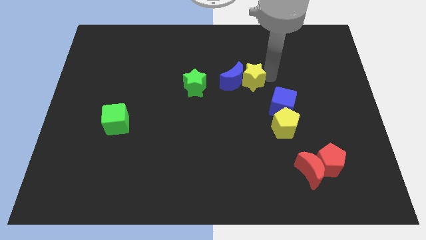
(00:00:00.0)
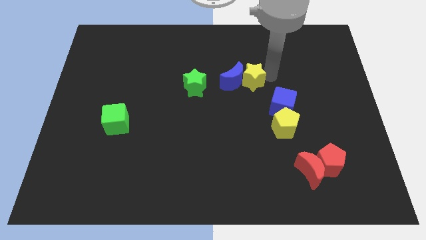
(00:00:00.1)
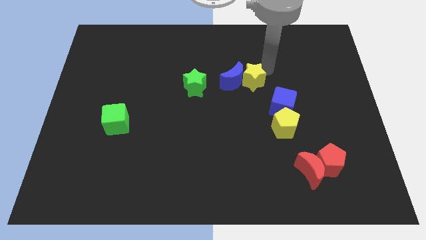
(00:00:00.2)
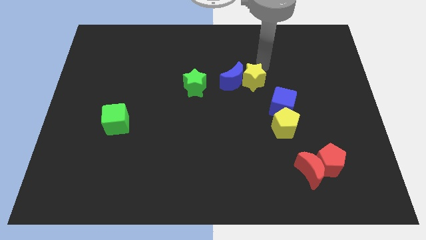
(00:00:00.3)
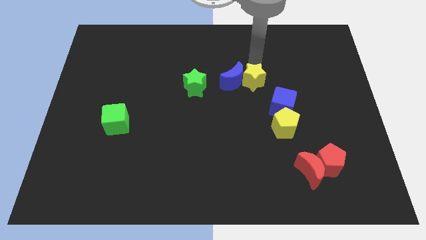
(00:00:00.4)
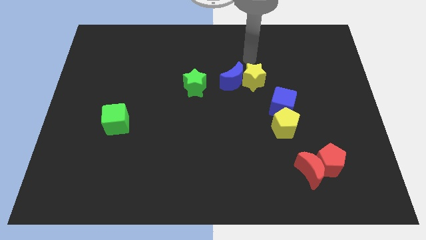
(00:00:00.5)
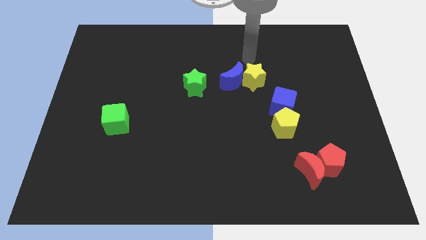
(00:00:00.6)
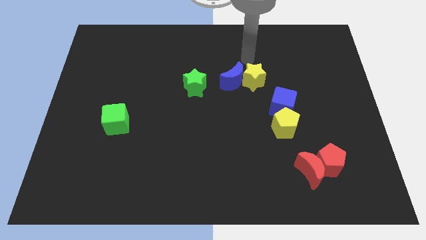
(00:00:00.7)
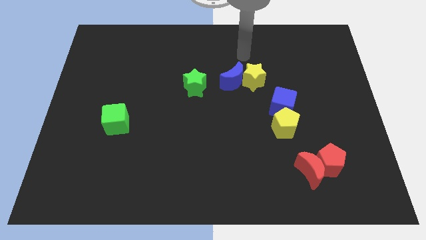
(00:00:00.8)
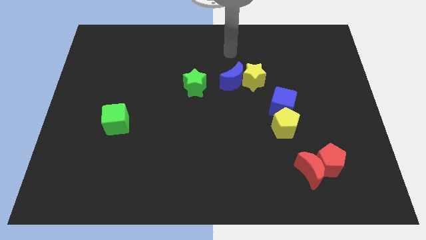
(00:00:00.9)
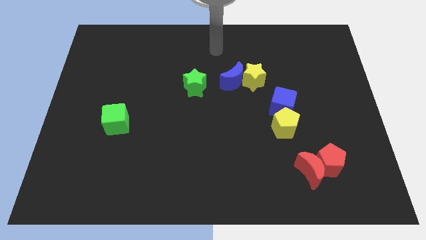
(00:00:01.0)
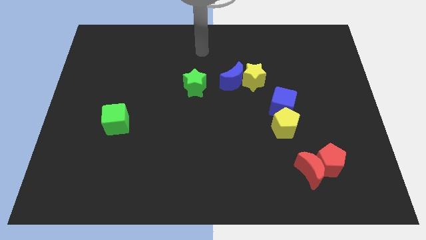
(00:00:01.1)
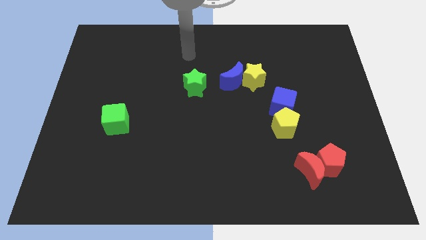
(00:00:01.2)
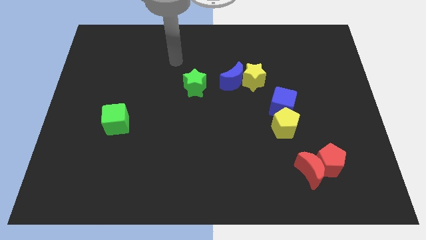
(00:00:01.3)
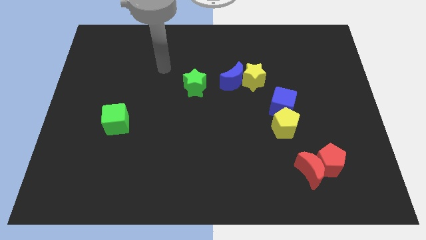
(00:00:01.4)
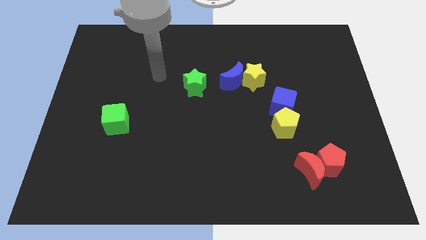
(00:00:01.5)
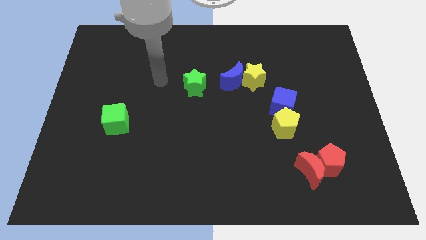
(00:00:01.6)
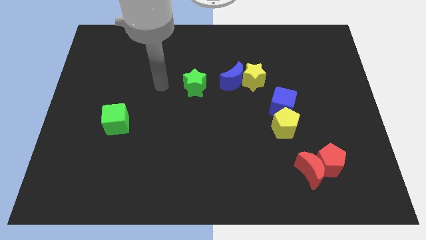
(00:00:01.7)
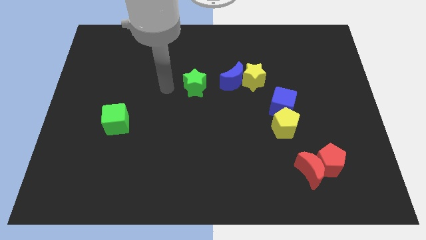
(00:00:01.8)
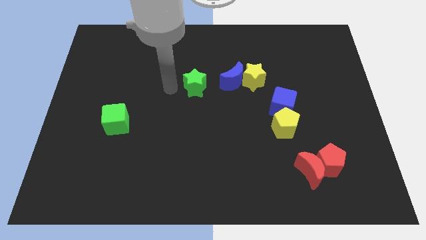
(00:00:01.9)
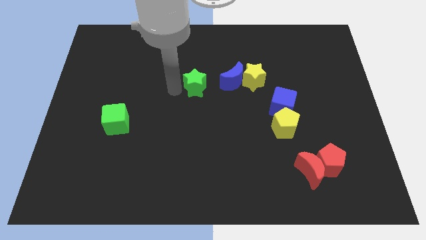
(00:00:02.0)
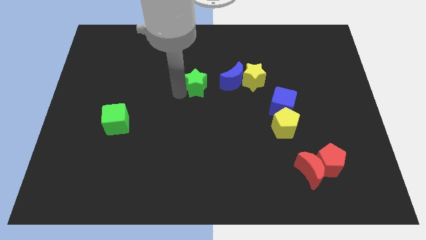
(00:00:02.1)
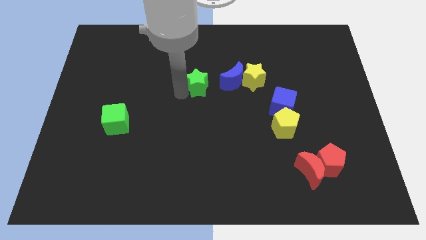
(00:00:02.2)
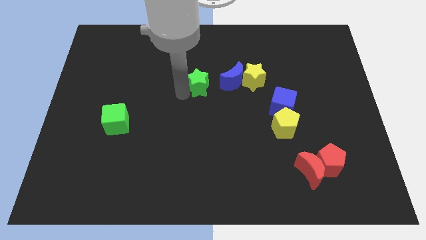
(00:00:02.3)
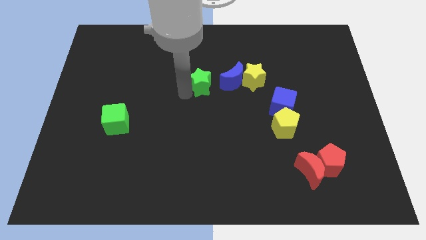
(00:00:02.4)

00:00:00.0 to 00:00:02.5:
touch the green star

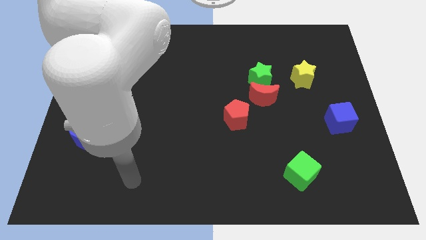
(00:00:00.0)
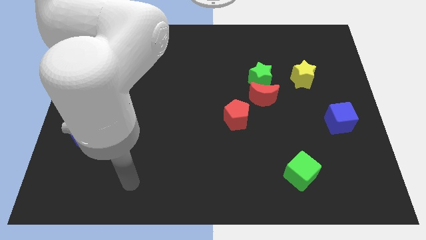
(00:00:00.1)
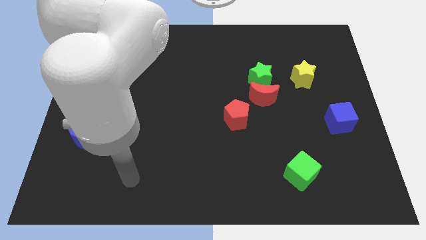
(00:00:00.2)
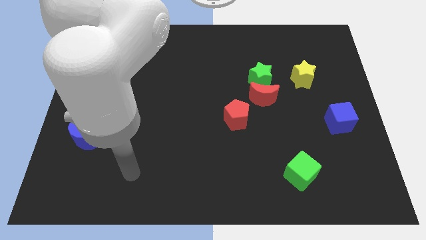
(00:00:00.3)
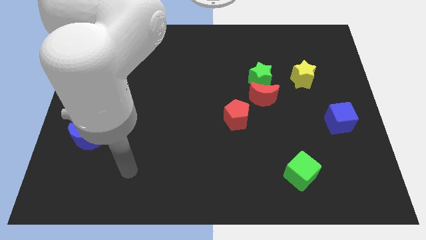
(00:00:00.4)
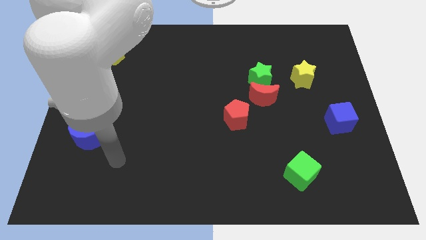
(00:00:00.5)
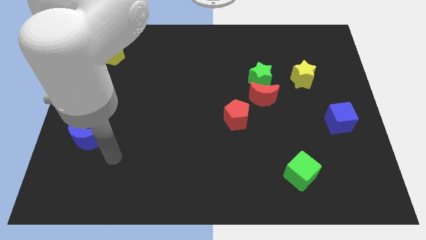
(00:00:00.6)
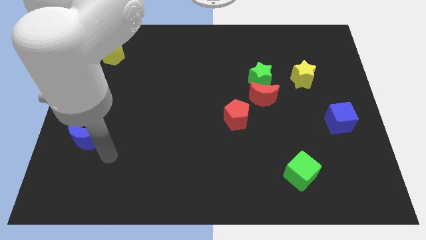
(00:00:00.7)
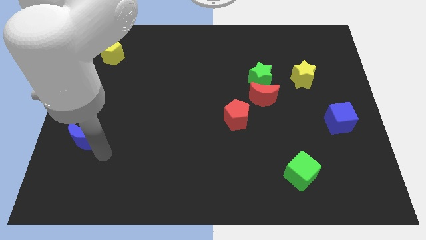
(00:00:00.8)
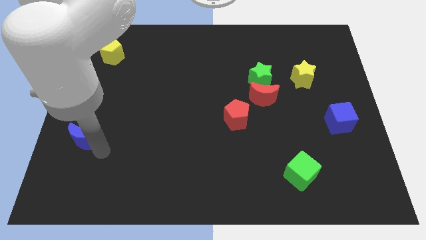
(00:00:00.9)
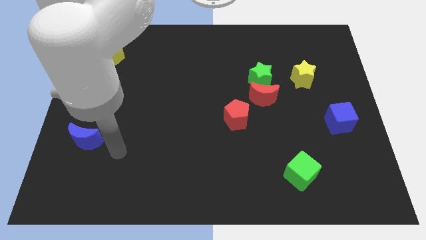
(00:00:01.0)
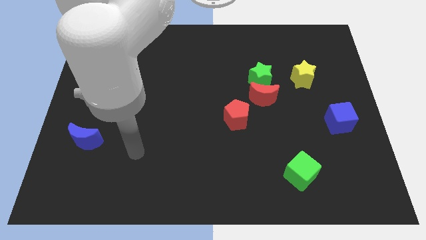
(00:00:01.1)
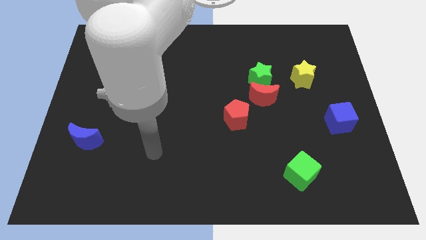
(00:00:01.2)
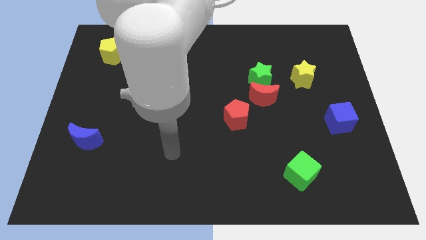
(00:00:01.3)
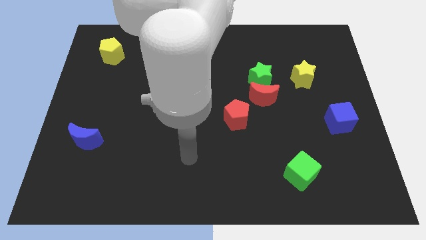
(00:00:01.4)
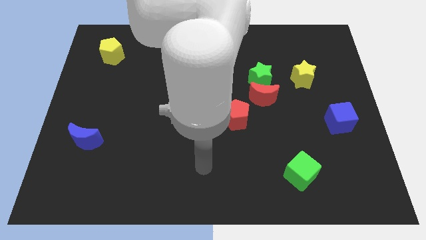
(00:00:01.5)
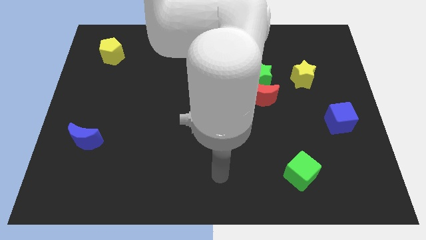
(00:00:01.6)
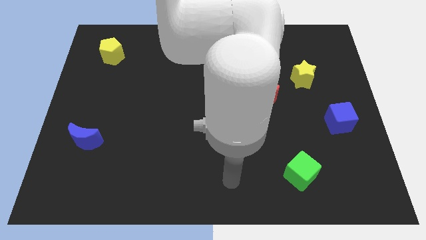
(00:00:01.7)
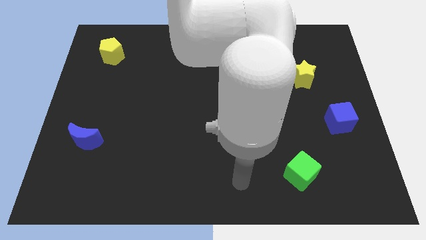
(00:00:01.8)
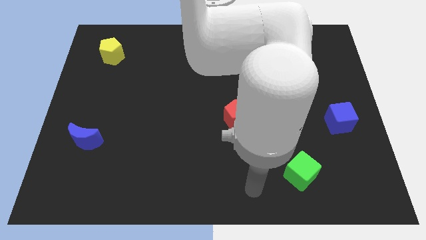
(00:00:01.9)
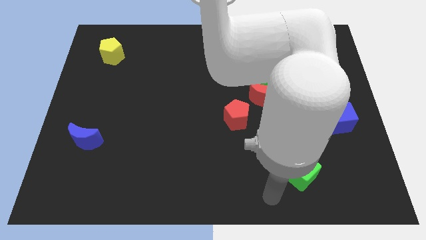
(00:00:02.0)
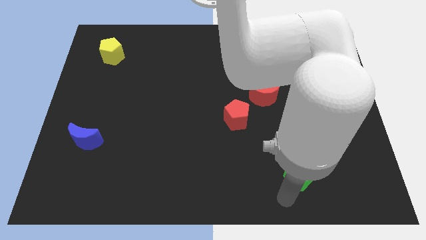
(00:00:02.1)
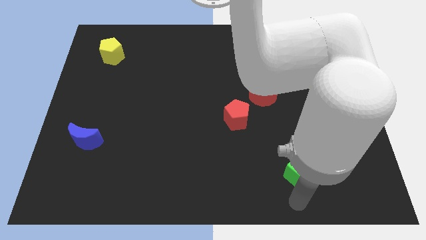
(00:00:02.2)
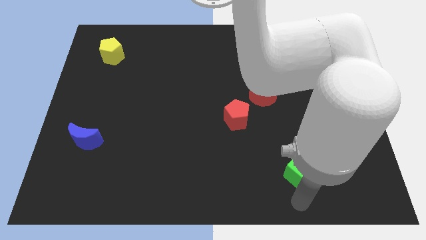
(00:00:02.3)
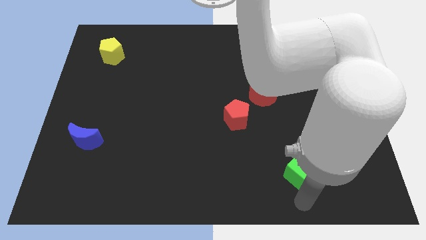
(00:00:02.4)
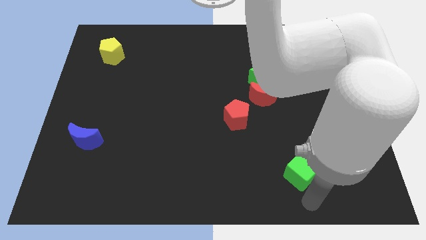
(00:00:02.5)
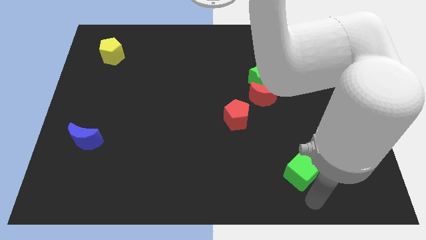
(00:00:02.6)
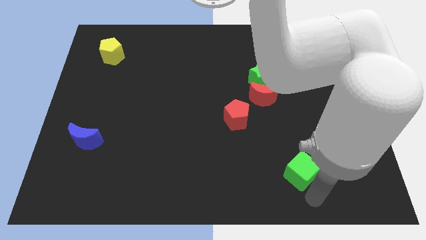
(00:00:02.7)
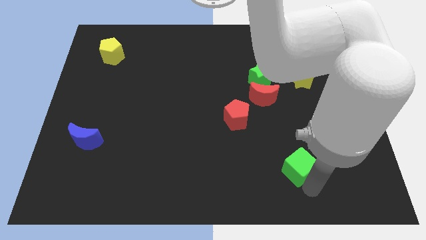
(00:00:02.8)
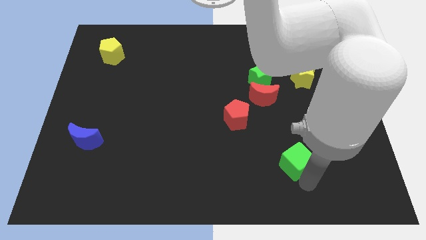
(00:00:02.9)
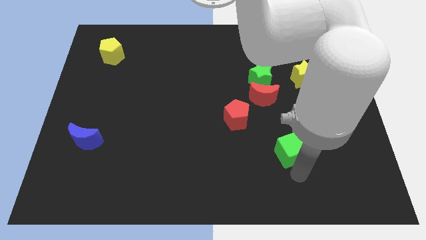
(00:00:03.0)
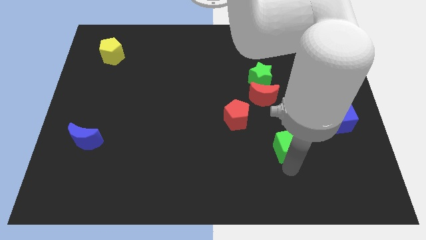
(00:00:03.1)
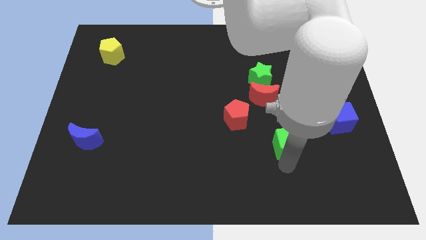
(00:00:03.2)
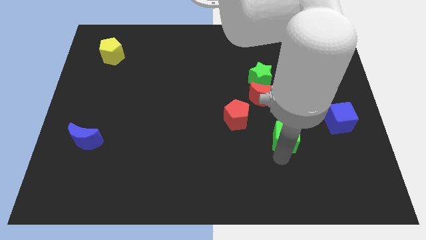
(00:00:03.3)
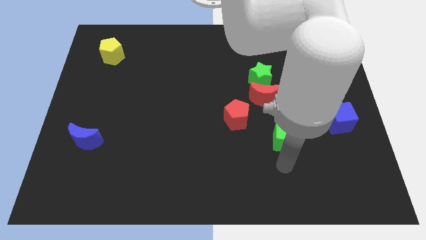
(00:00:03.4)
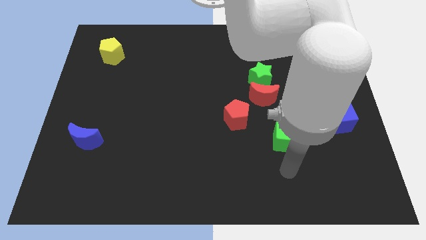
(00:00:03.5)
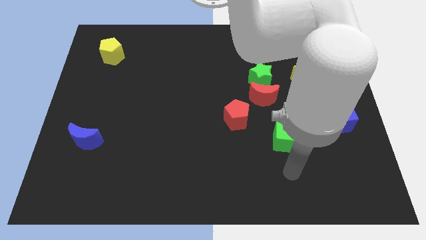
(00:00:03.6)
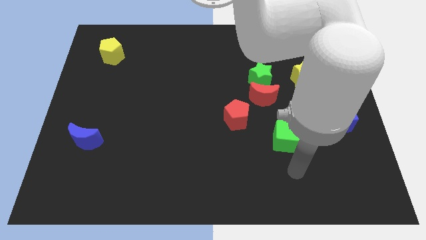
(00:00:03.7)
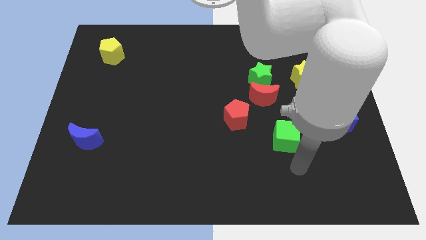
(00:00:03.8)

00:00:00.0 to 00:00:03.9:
go and drag the green cube upwards

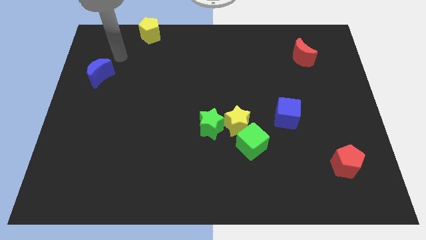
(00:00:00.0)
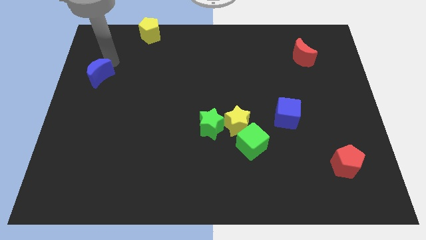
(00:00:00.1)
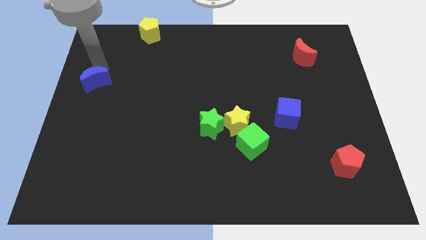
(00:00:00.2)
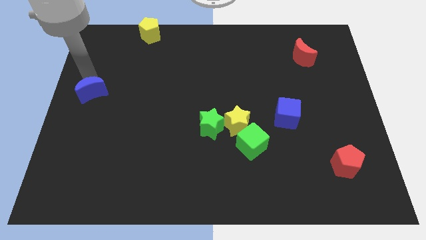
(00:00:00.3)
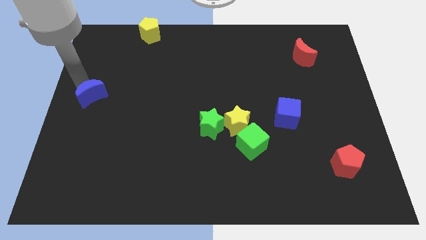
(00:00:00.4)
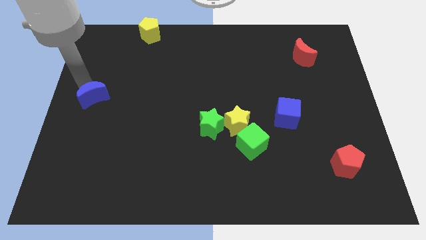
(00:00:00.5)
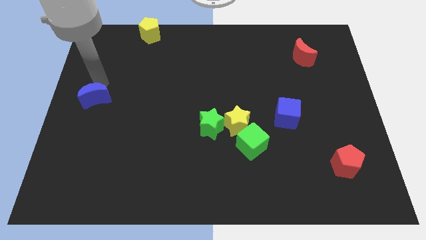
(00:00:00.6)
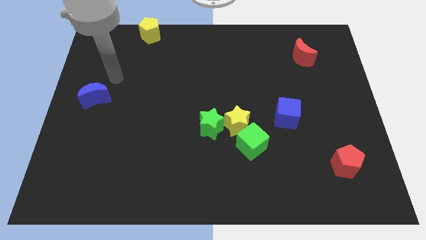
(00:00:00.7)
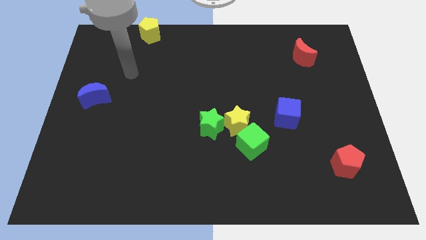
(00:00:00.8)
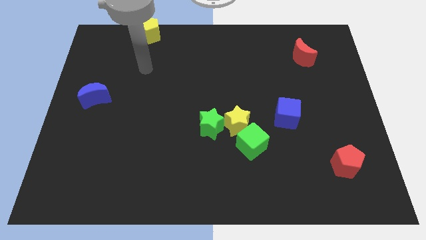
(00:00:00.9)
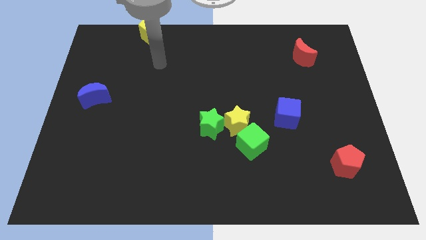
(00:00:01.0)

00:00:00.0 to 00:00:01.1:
push the blue moon downwards slightly

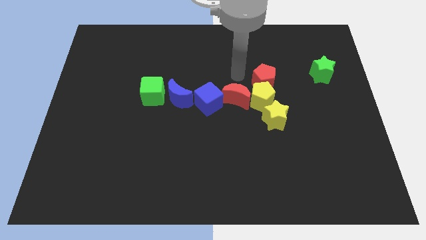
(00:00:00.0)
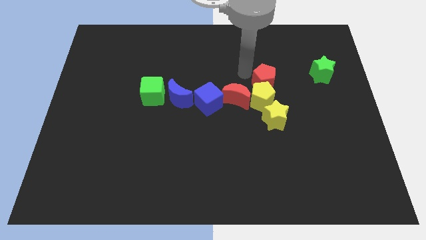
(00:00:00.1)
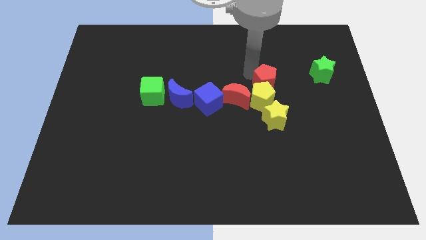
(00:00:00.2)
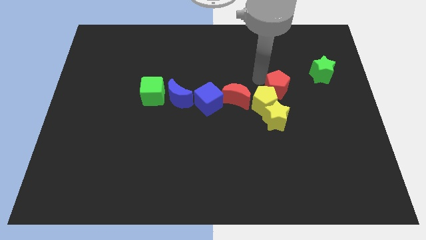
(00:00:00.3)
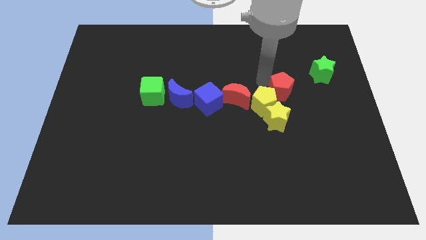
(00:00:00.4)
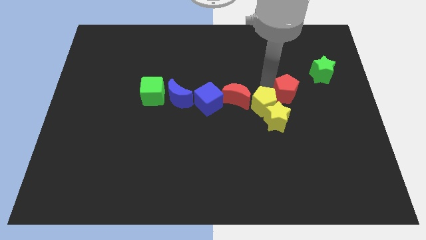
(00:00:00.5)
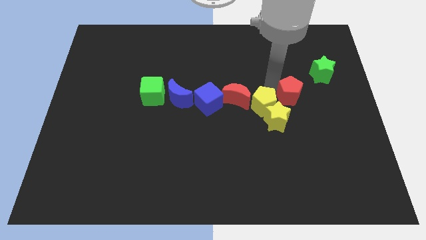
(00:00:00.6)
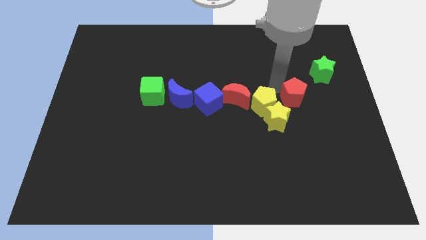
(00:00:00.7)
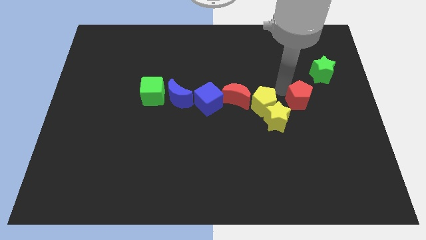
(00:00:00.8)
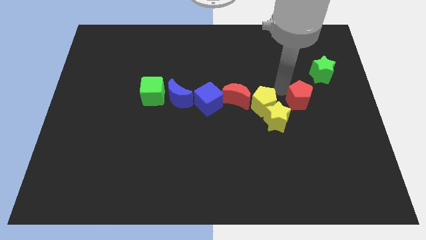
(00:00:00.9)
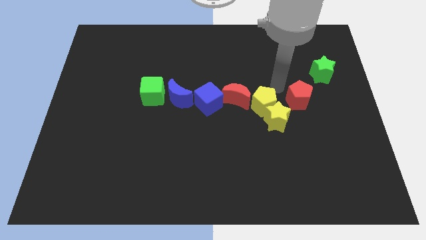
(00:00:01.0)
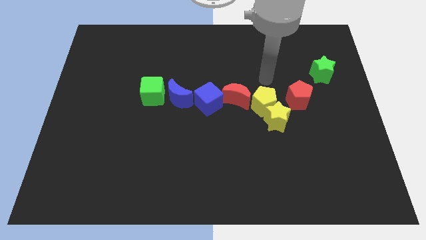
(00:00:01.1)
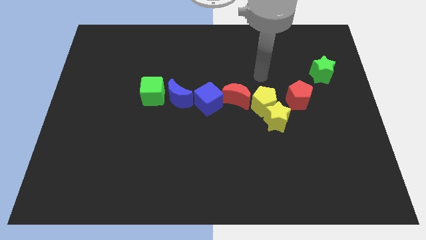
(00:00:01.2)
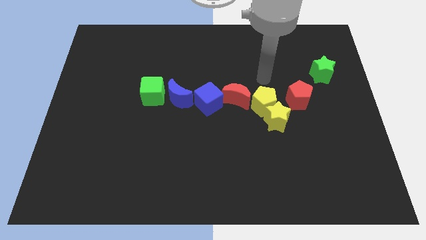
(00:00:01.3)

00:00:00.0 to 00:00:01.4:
separate the red pentagon from the yellow pentago
